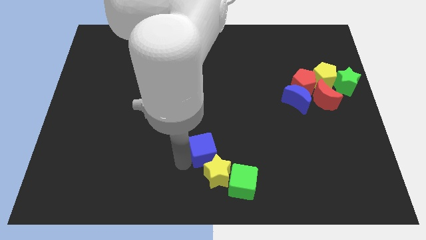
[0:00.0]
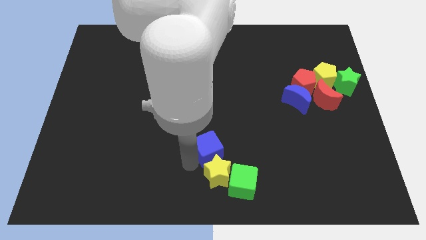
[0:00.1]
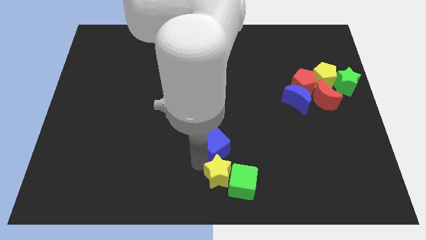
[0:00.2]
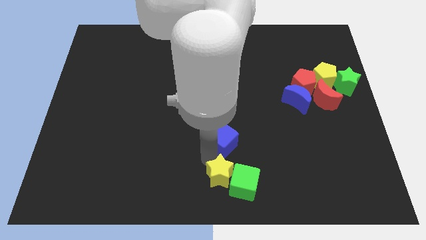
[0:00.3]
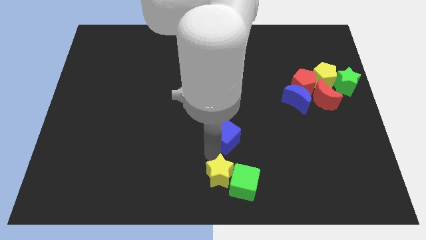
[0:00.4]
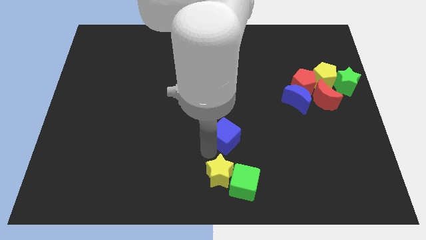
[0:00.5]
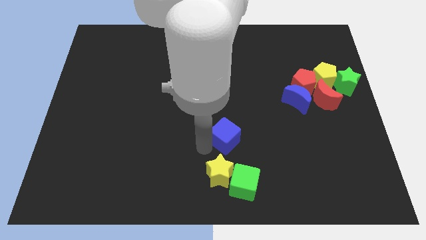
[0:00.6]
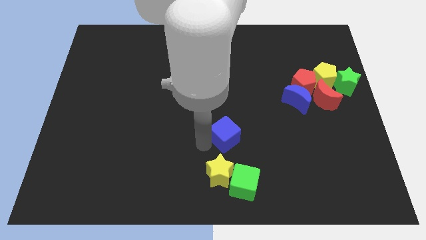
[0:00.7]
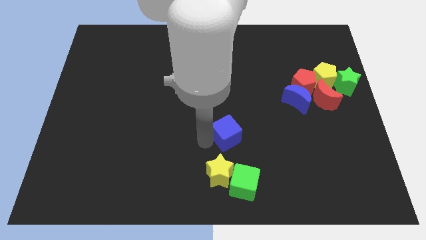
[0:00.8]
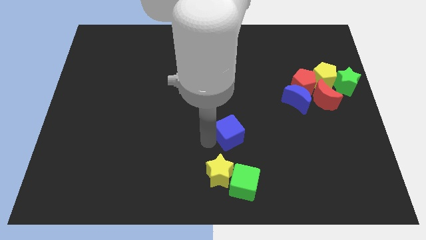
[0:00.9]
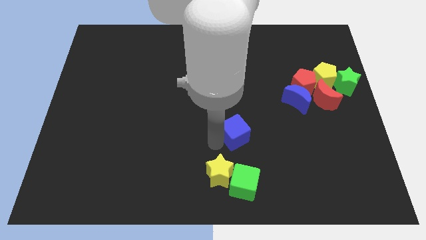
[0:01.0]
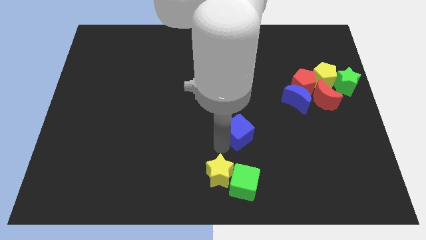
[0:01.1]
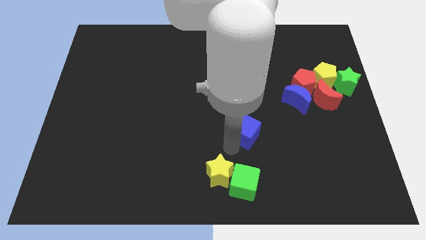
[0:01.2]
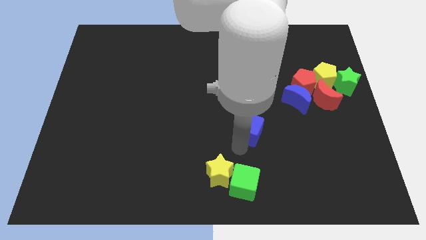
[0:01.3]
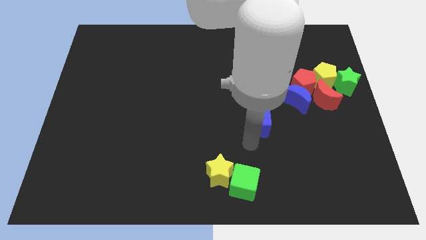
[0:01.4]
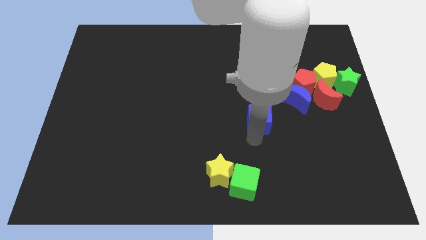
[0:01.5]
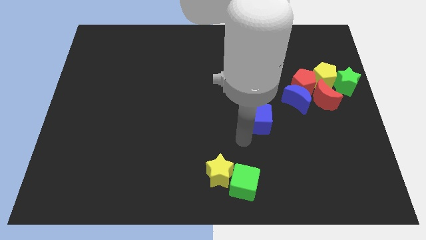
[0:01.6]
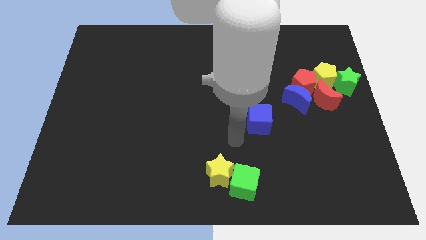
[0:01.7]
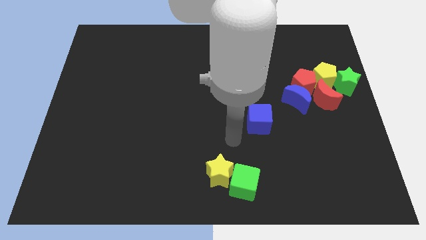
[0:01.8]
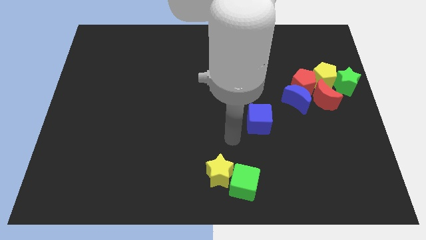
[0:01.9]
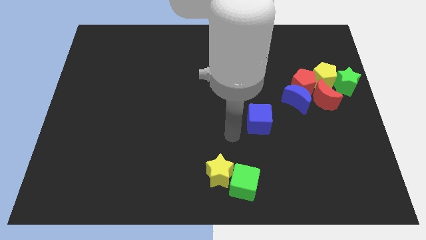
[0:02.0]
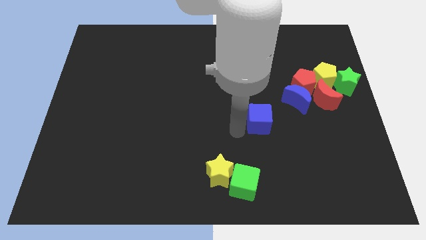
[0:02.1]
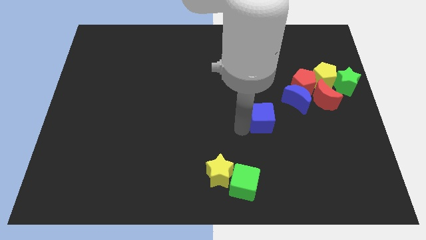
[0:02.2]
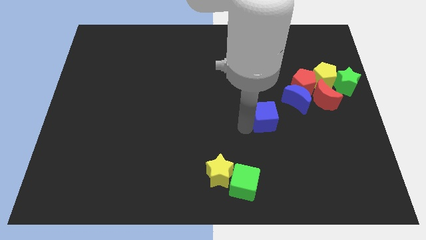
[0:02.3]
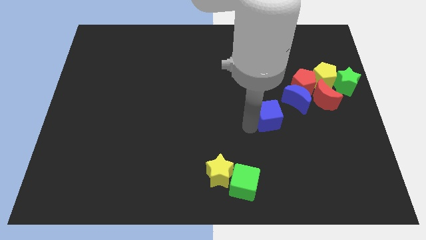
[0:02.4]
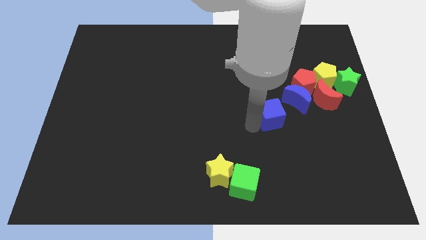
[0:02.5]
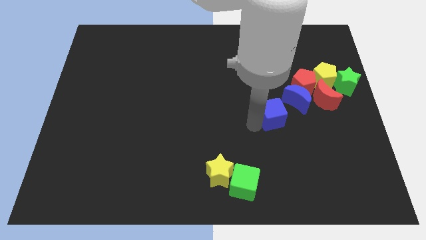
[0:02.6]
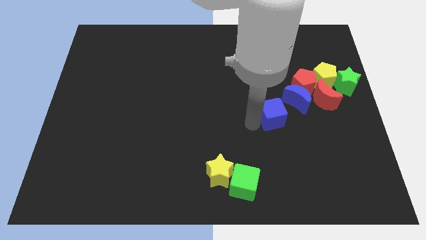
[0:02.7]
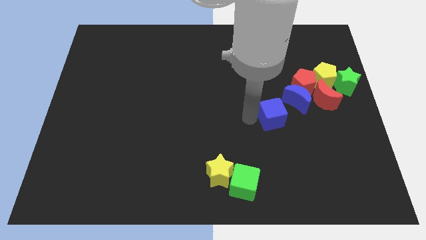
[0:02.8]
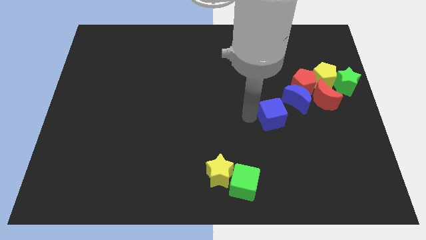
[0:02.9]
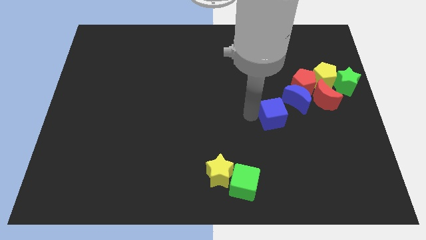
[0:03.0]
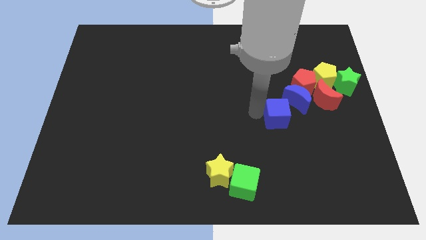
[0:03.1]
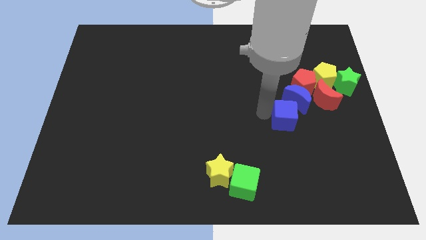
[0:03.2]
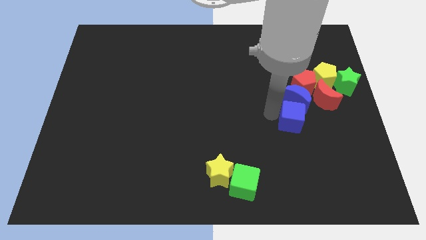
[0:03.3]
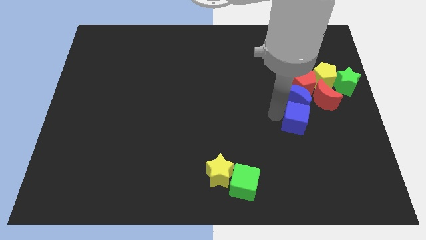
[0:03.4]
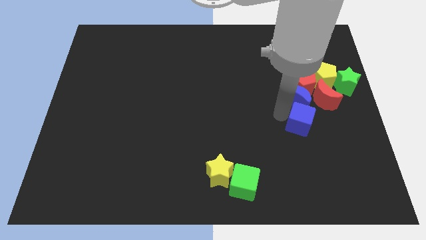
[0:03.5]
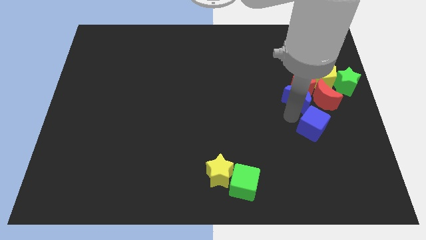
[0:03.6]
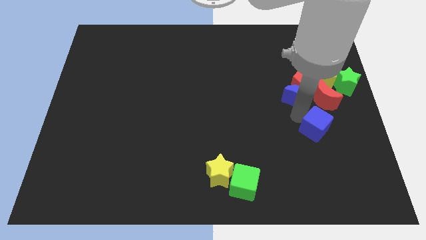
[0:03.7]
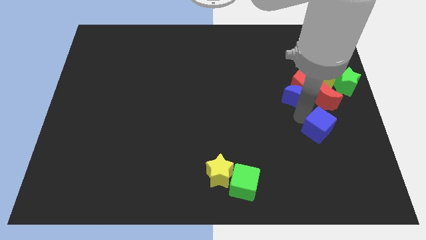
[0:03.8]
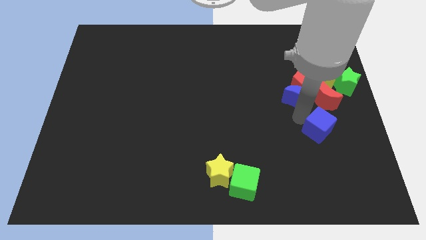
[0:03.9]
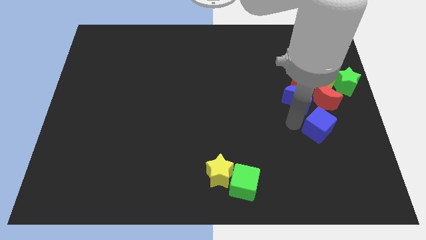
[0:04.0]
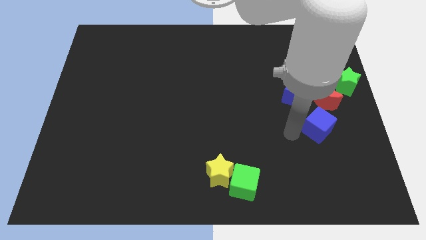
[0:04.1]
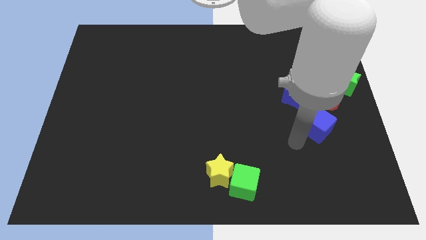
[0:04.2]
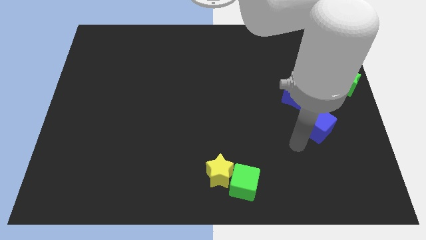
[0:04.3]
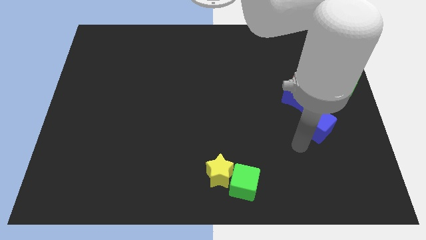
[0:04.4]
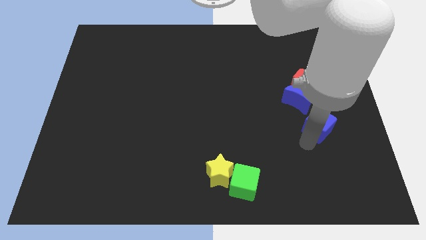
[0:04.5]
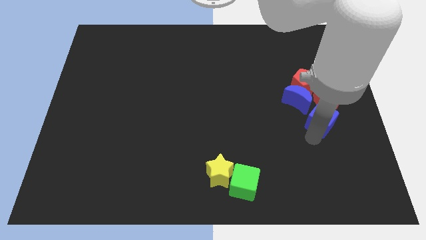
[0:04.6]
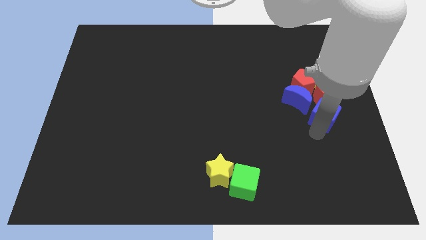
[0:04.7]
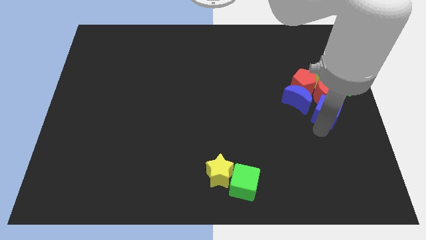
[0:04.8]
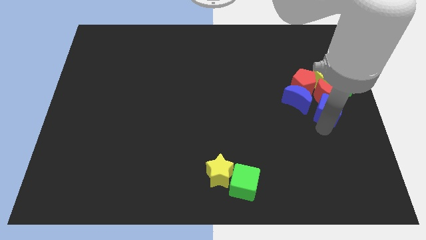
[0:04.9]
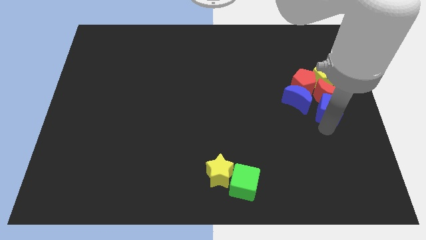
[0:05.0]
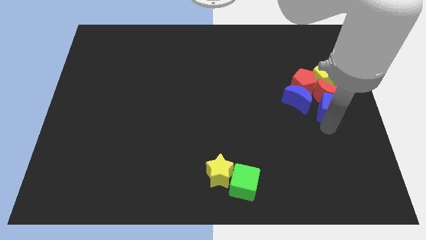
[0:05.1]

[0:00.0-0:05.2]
move the blue cube into the red crescent

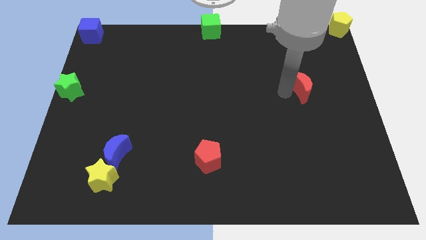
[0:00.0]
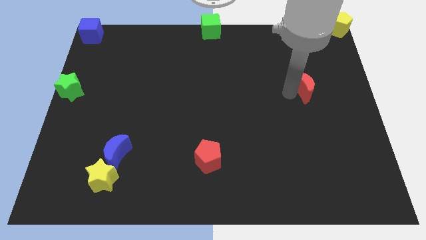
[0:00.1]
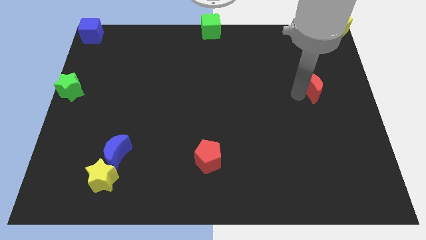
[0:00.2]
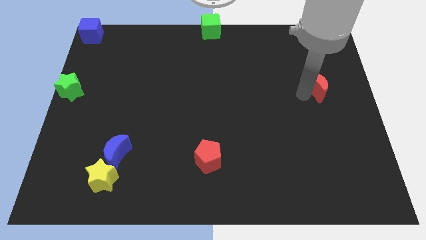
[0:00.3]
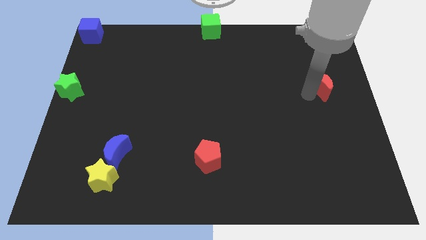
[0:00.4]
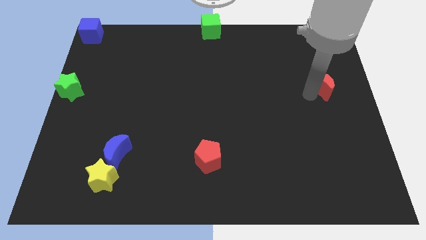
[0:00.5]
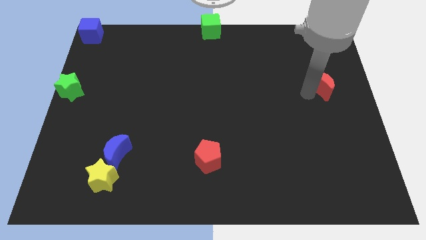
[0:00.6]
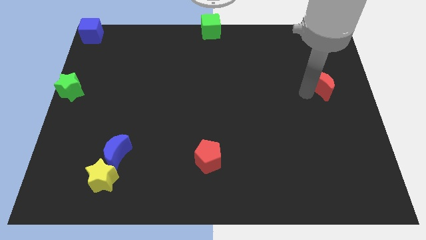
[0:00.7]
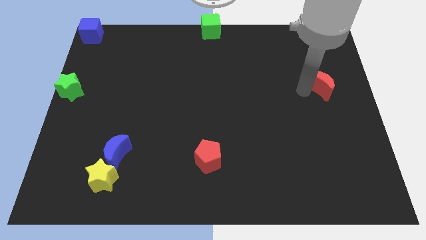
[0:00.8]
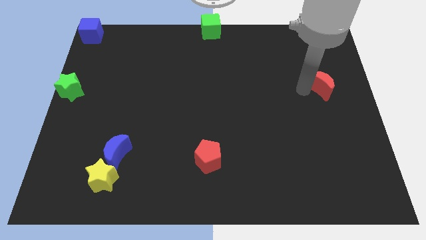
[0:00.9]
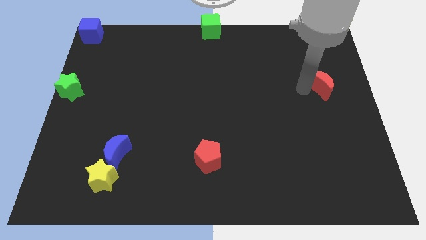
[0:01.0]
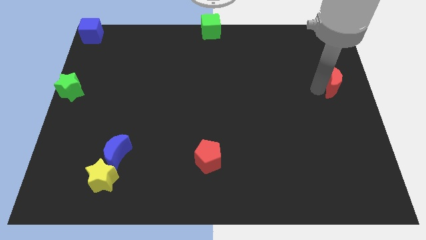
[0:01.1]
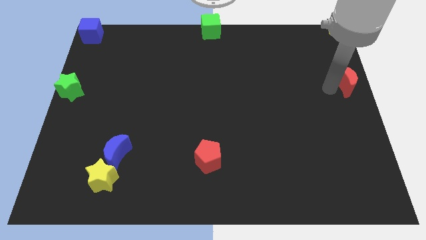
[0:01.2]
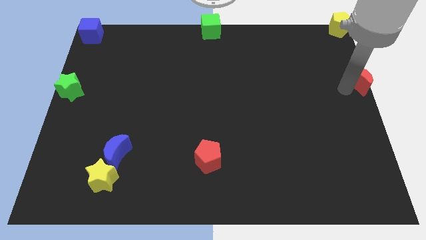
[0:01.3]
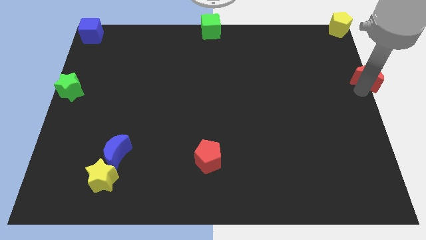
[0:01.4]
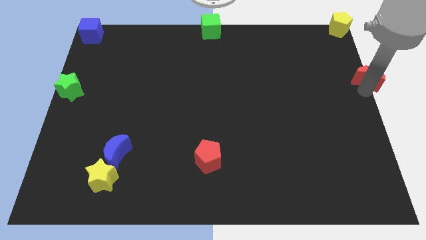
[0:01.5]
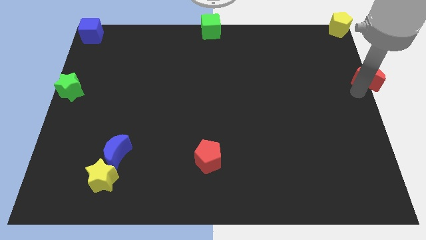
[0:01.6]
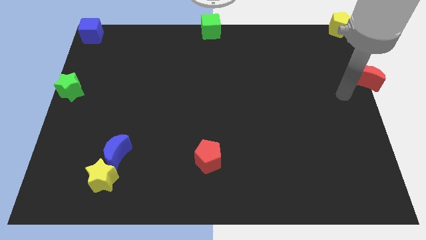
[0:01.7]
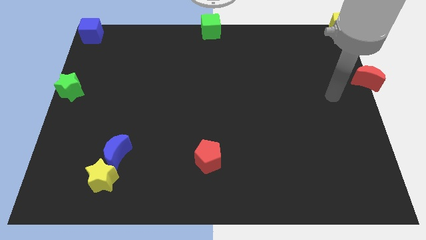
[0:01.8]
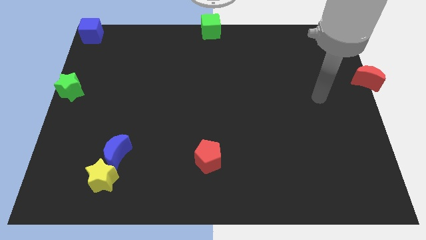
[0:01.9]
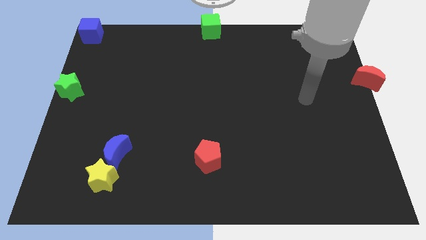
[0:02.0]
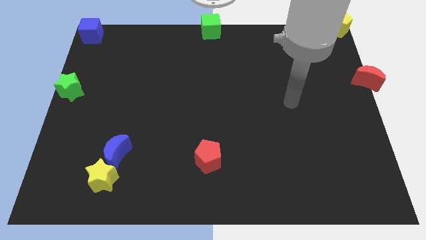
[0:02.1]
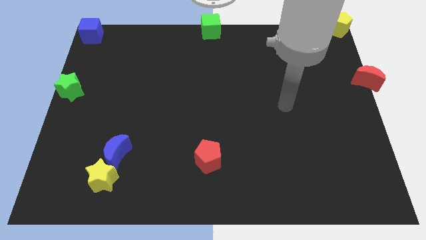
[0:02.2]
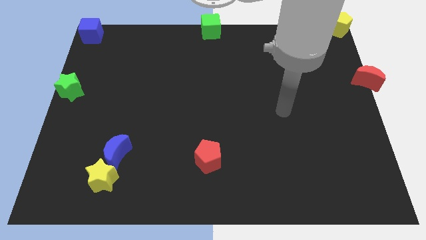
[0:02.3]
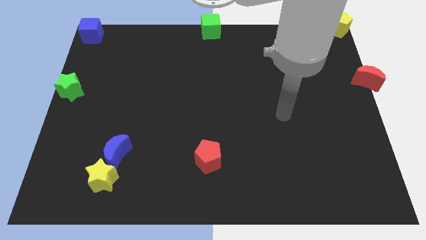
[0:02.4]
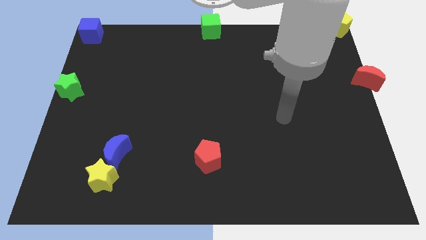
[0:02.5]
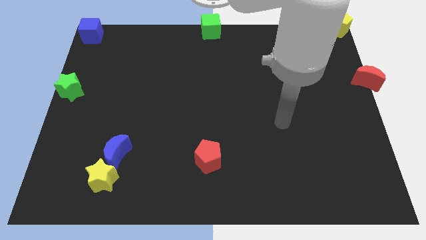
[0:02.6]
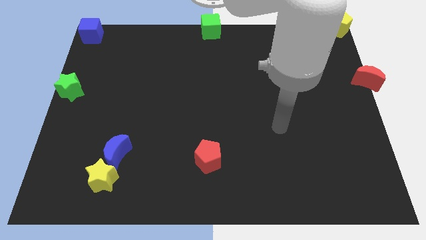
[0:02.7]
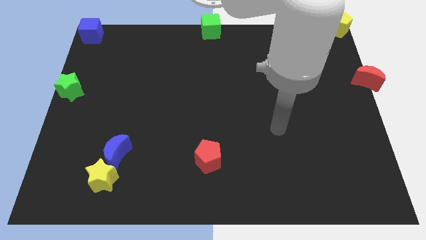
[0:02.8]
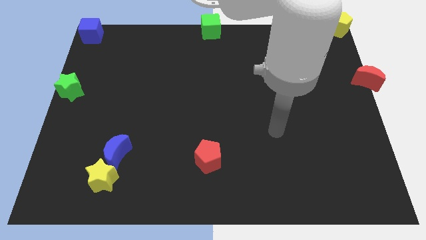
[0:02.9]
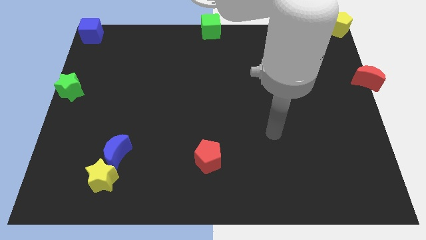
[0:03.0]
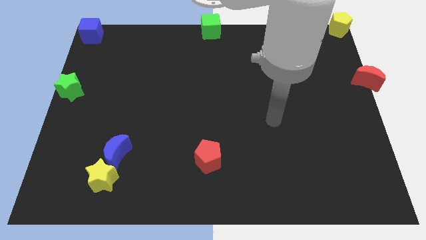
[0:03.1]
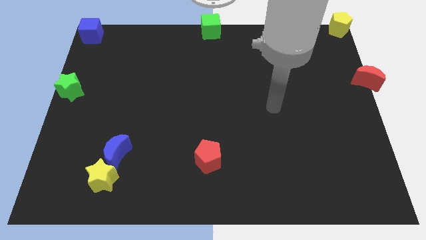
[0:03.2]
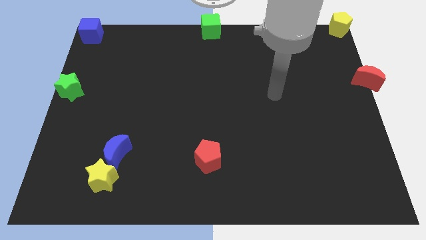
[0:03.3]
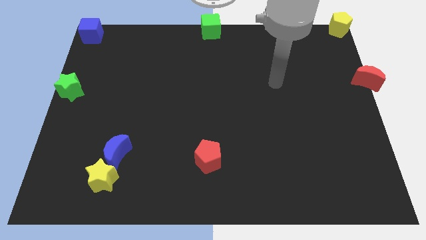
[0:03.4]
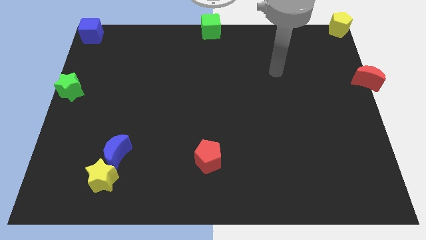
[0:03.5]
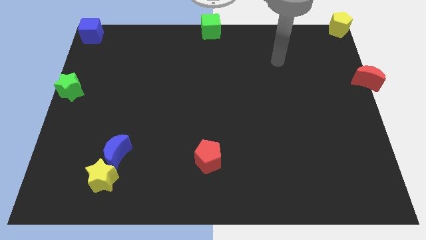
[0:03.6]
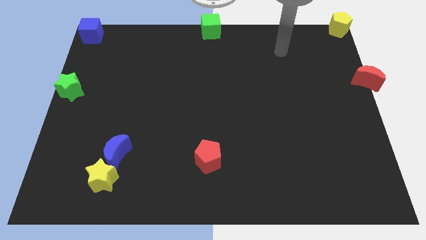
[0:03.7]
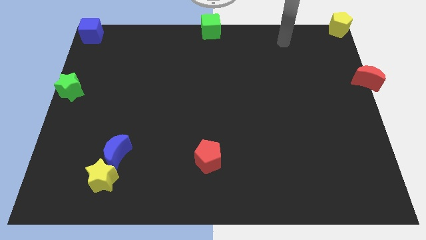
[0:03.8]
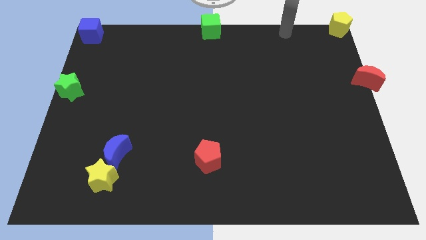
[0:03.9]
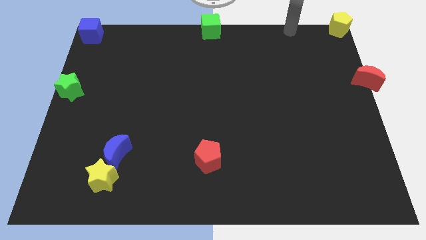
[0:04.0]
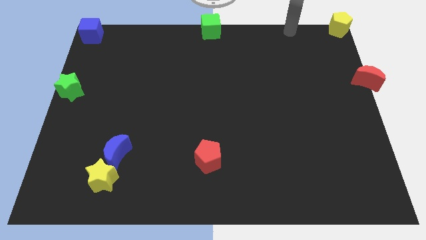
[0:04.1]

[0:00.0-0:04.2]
place the red crescent vertically below the yellow pentagon
